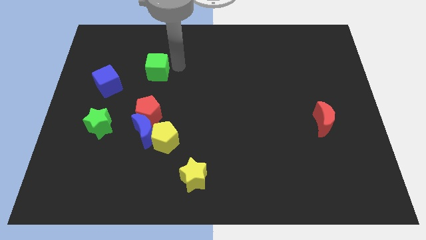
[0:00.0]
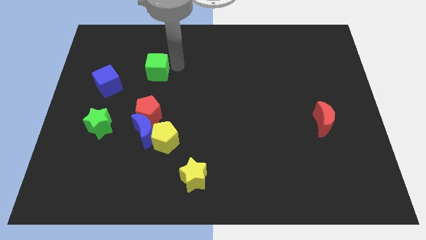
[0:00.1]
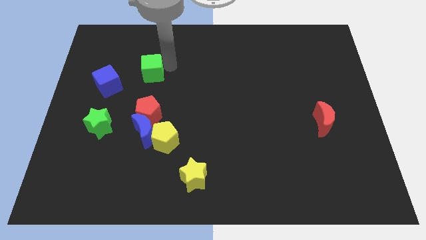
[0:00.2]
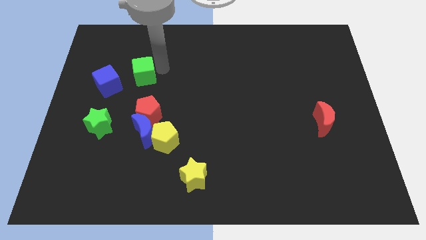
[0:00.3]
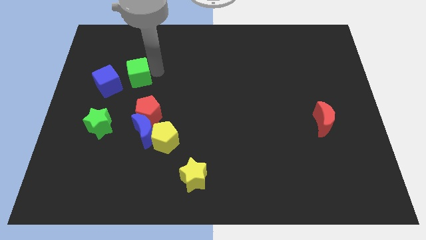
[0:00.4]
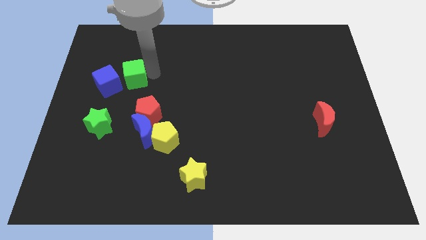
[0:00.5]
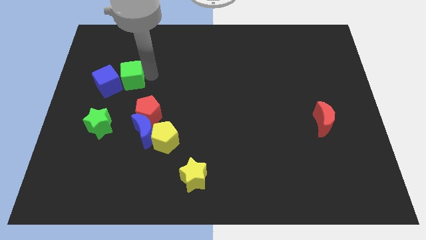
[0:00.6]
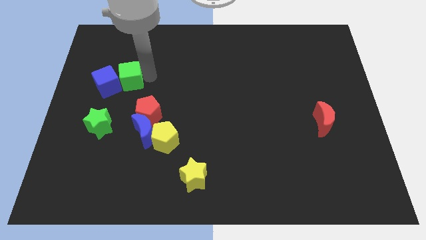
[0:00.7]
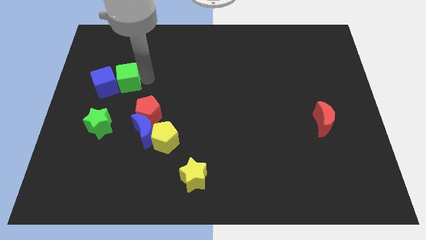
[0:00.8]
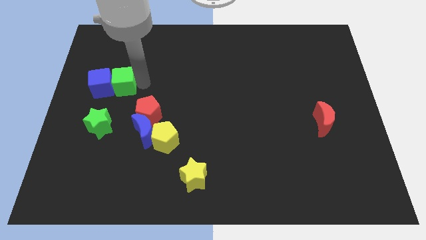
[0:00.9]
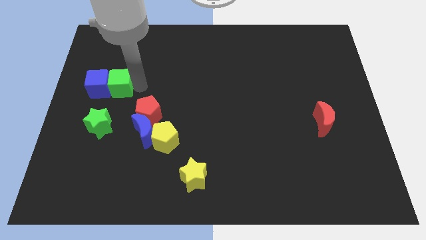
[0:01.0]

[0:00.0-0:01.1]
push the green cube to the right of the blue cube

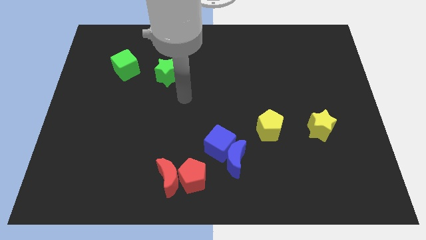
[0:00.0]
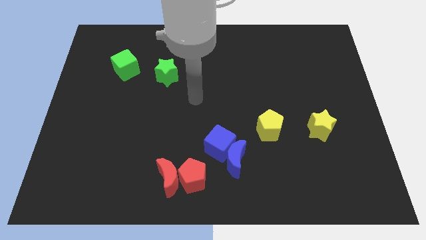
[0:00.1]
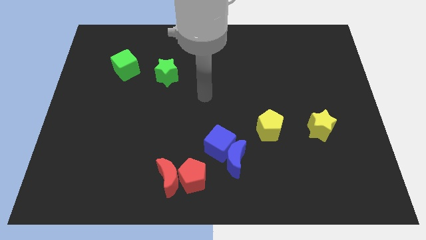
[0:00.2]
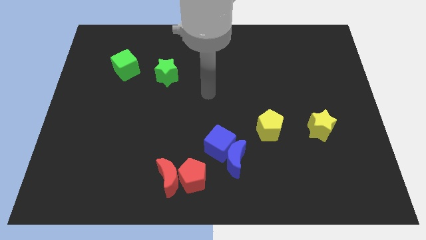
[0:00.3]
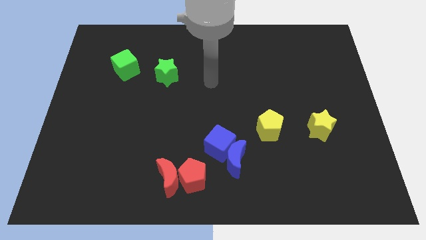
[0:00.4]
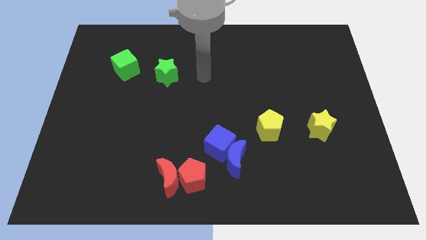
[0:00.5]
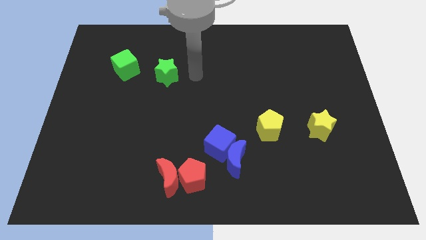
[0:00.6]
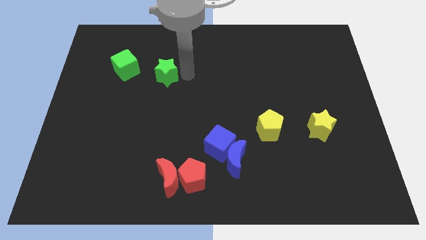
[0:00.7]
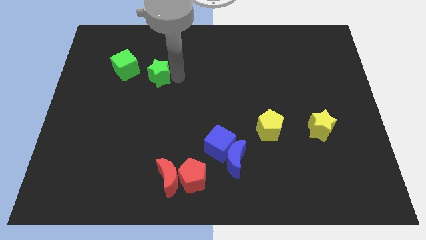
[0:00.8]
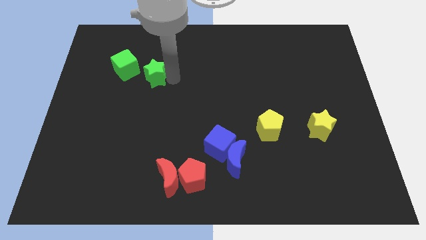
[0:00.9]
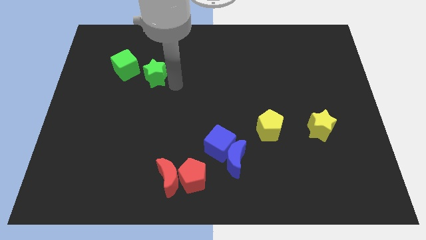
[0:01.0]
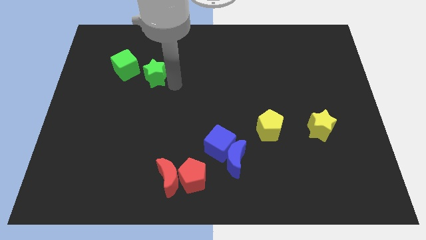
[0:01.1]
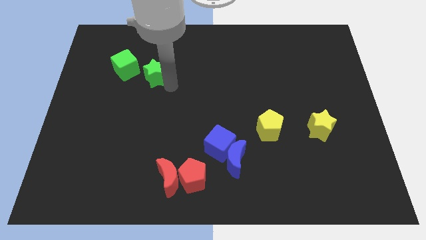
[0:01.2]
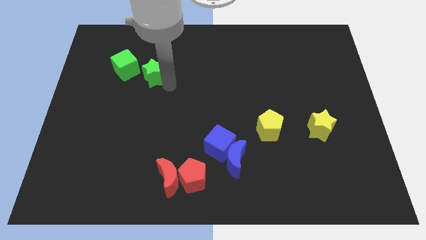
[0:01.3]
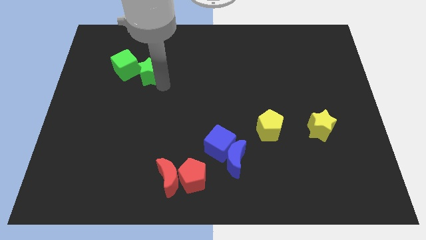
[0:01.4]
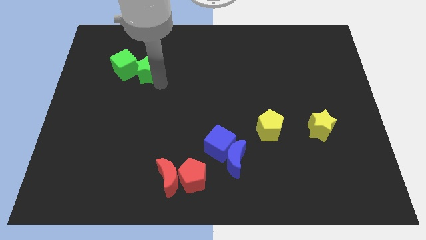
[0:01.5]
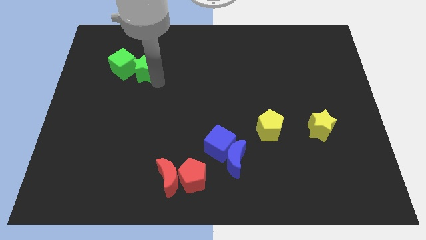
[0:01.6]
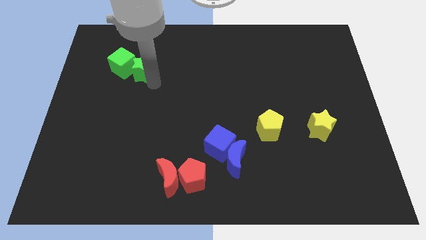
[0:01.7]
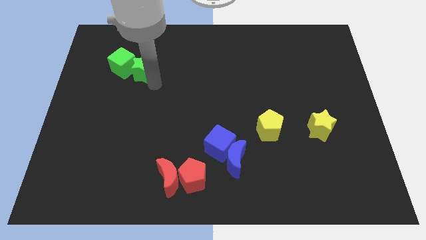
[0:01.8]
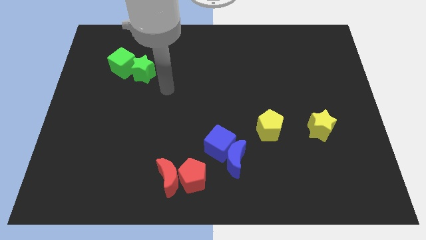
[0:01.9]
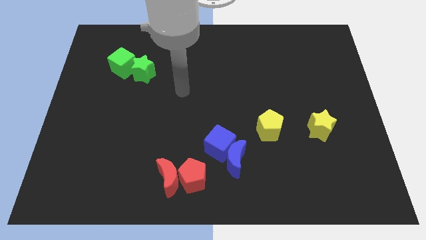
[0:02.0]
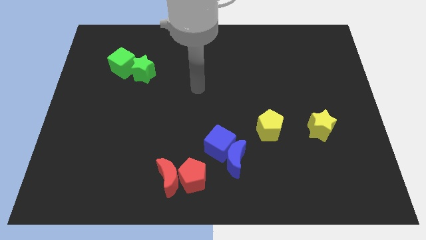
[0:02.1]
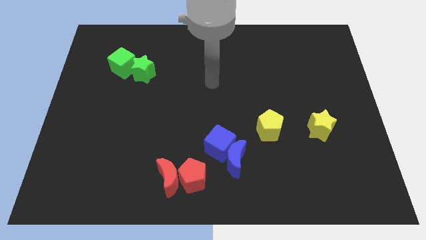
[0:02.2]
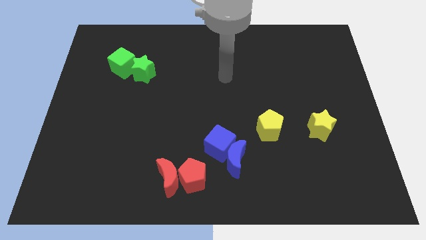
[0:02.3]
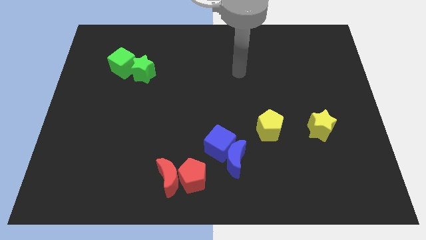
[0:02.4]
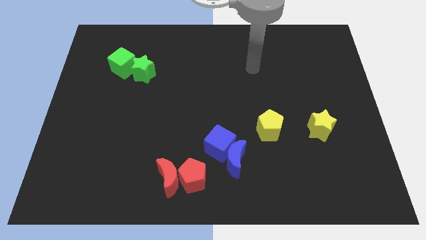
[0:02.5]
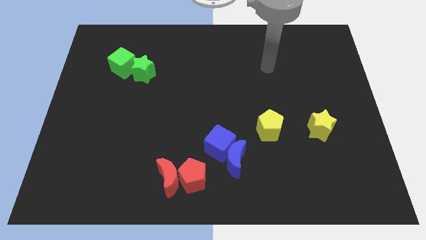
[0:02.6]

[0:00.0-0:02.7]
move the green star into the green cube

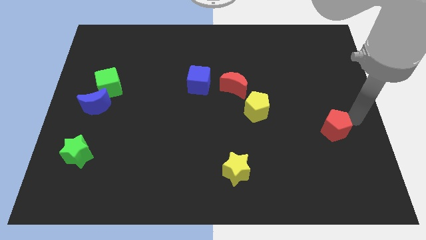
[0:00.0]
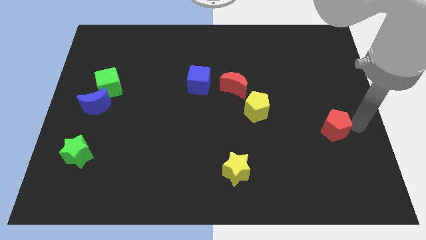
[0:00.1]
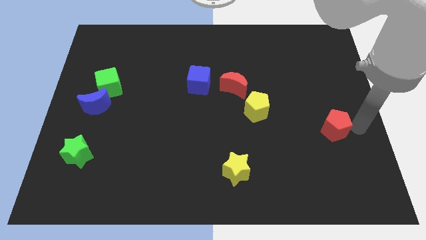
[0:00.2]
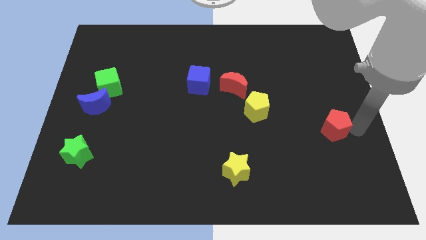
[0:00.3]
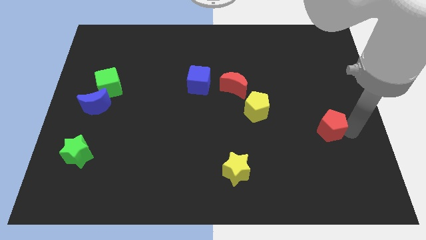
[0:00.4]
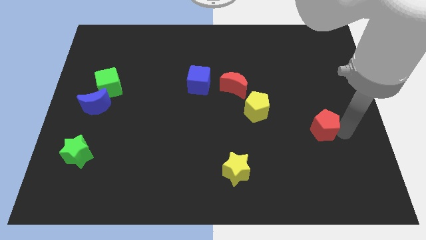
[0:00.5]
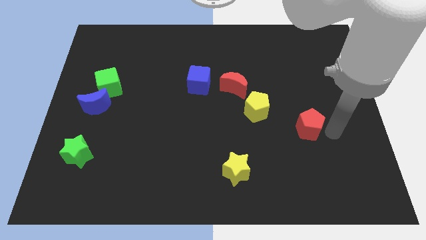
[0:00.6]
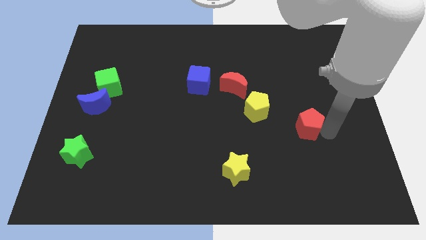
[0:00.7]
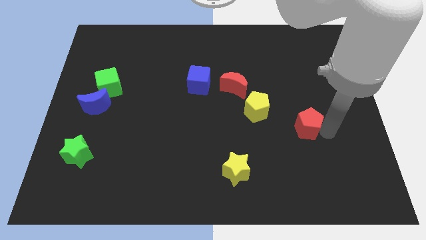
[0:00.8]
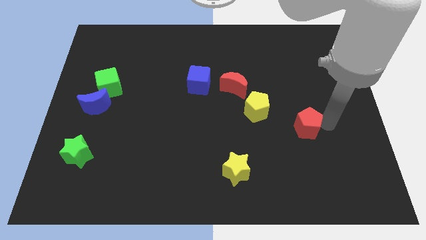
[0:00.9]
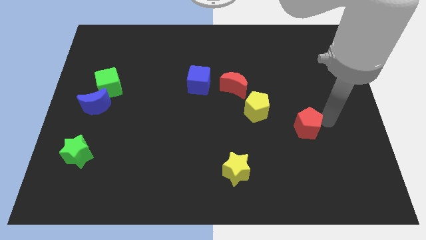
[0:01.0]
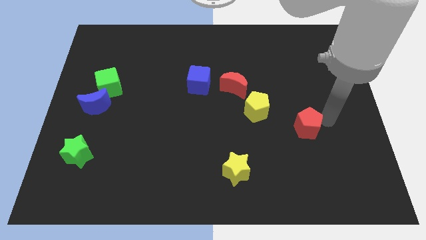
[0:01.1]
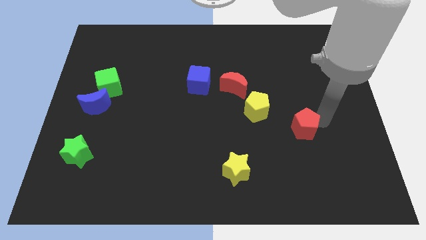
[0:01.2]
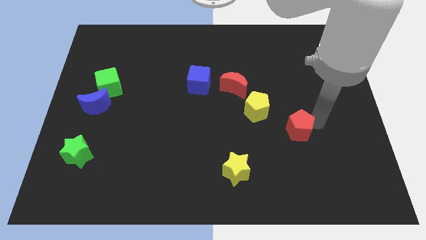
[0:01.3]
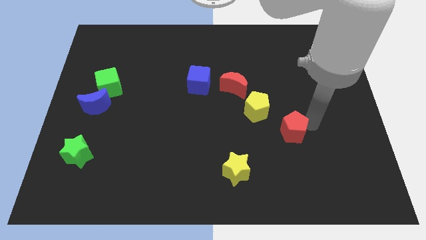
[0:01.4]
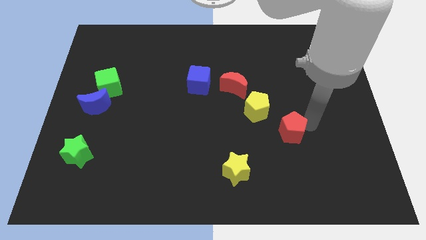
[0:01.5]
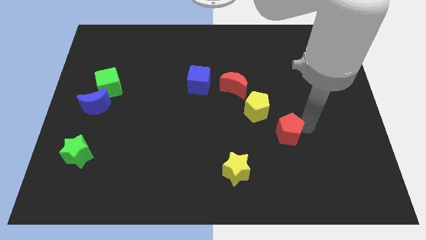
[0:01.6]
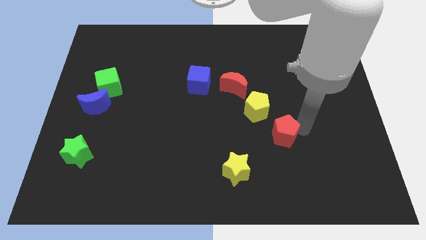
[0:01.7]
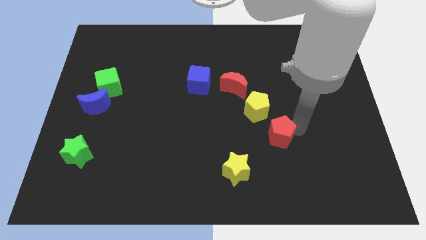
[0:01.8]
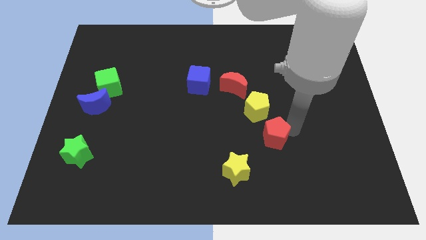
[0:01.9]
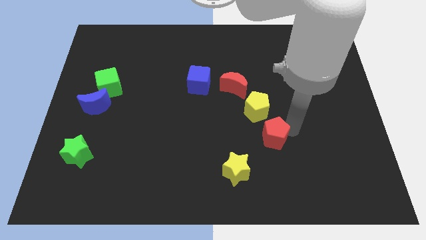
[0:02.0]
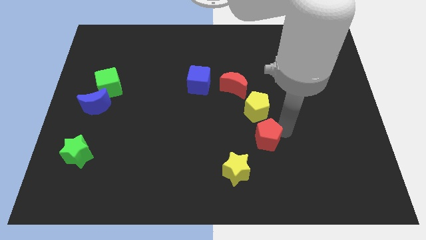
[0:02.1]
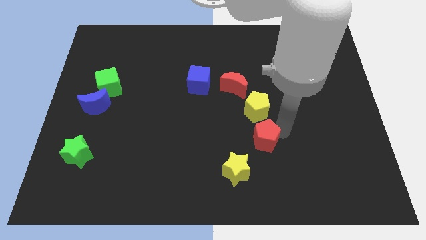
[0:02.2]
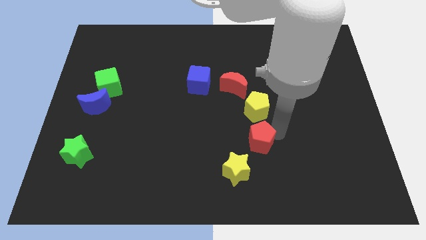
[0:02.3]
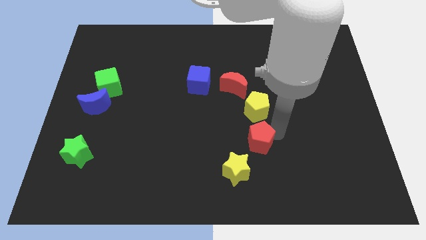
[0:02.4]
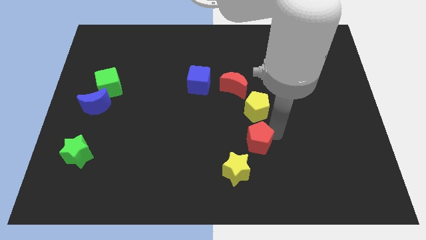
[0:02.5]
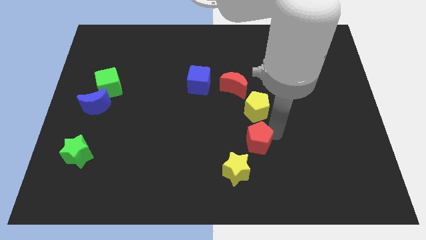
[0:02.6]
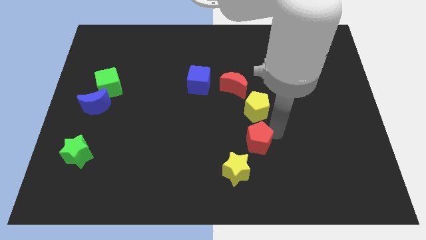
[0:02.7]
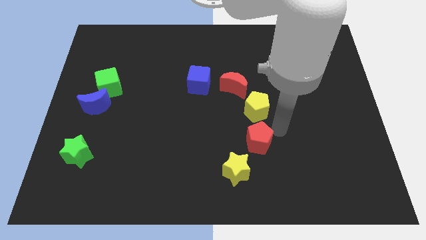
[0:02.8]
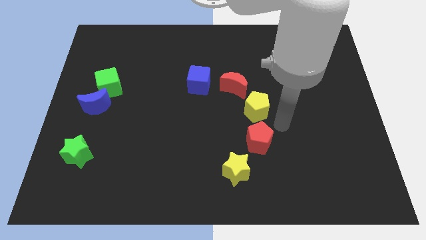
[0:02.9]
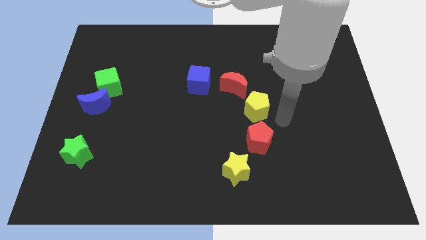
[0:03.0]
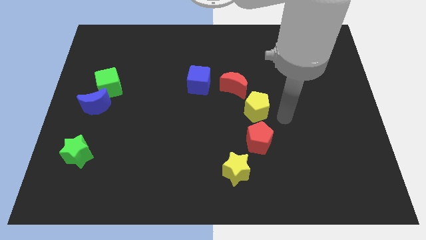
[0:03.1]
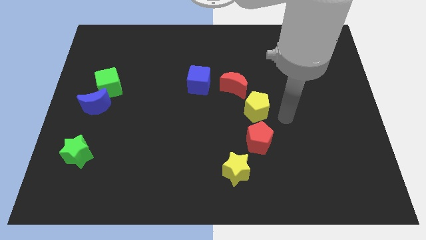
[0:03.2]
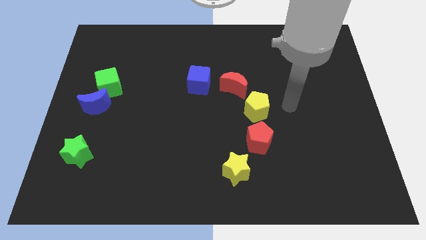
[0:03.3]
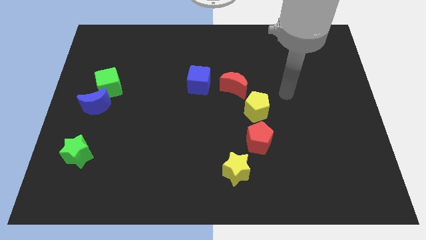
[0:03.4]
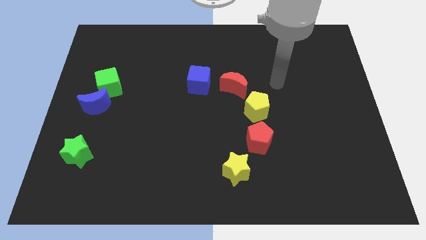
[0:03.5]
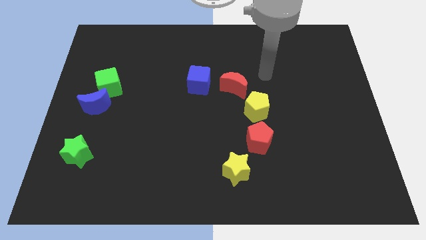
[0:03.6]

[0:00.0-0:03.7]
push the red pentagon below the yellow pentagon

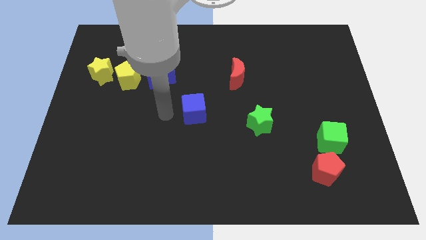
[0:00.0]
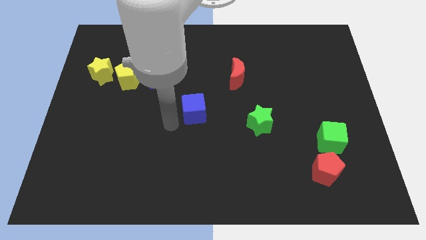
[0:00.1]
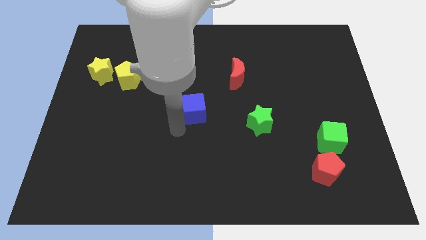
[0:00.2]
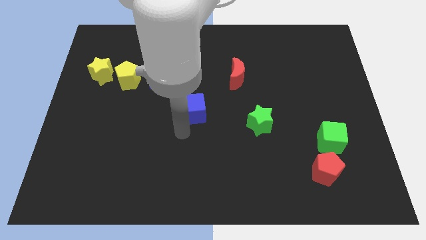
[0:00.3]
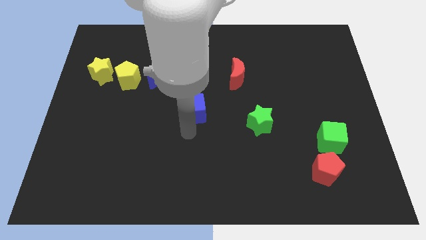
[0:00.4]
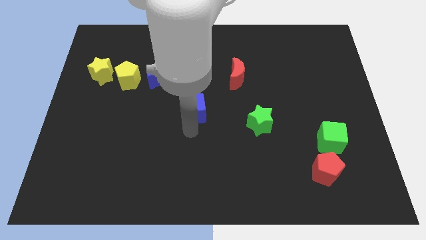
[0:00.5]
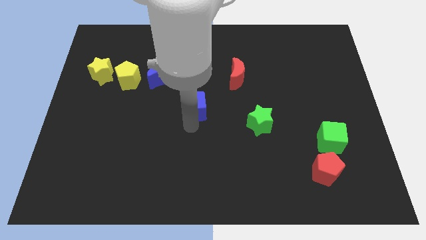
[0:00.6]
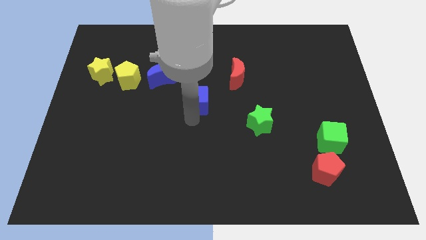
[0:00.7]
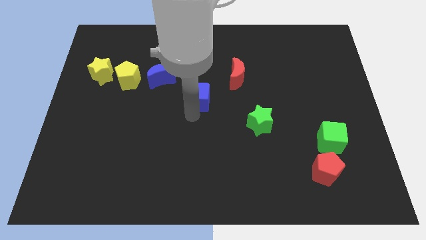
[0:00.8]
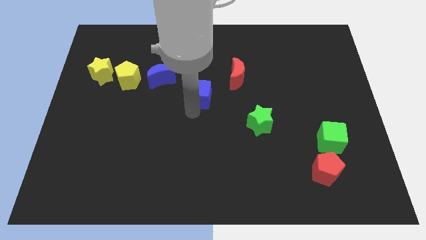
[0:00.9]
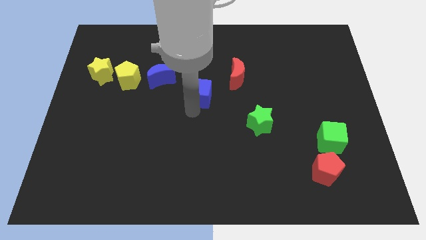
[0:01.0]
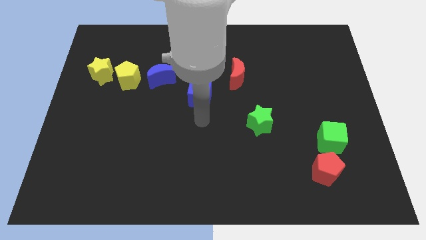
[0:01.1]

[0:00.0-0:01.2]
push the blue cube diagonally top left to green star

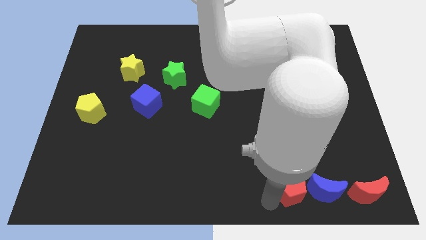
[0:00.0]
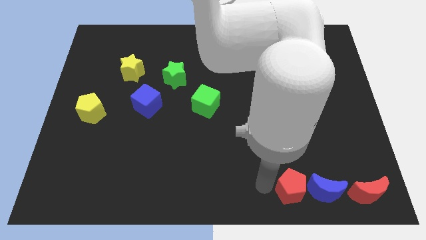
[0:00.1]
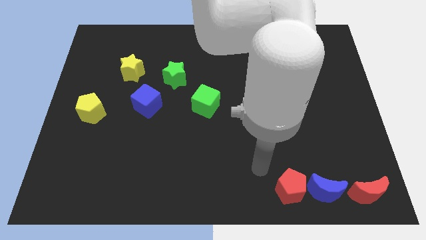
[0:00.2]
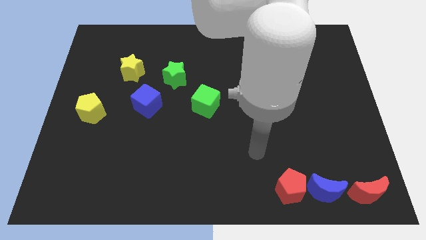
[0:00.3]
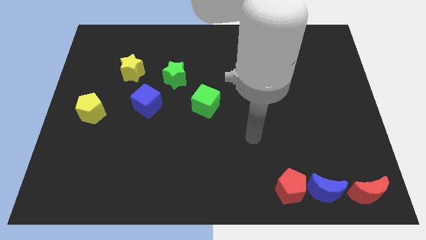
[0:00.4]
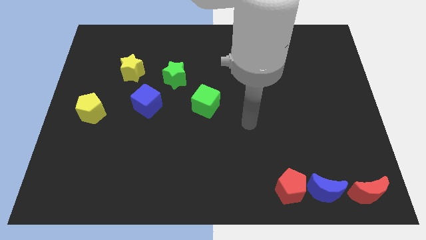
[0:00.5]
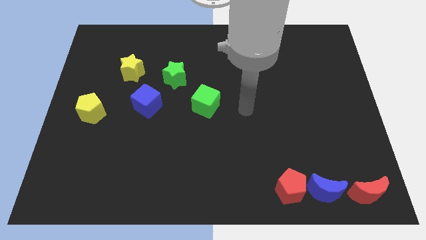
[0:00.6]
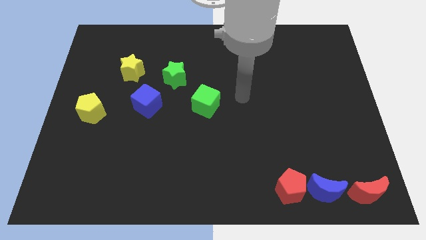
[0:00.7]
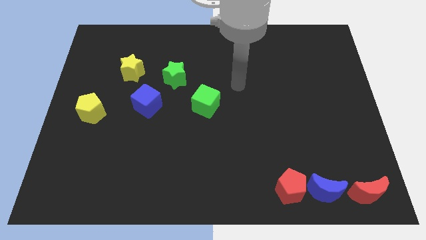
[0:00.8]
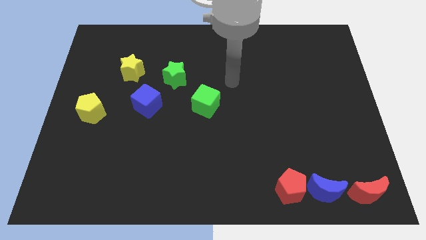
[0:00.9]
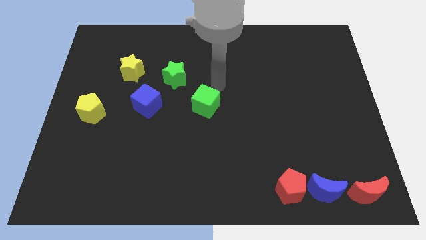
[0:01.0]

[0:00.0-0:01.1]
point the arm to the right top of the green cube
